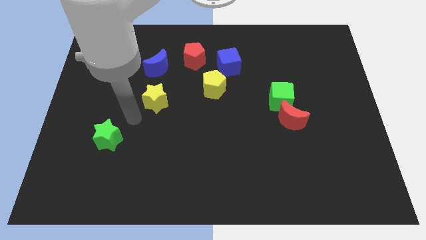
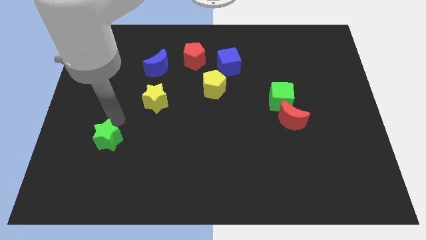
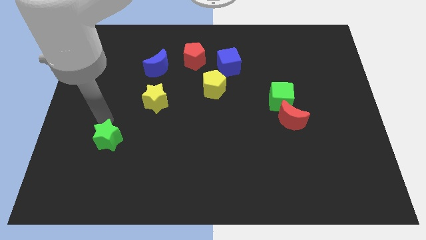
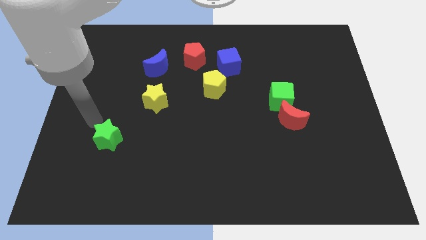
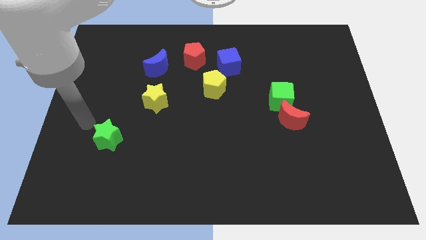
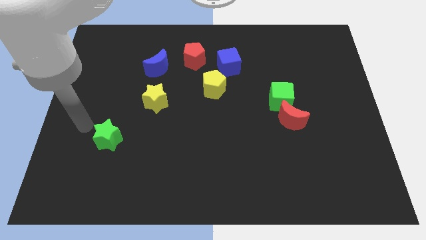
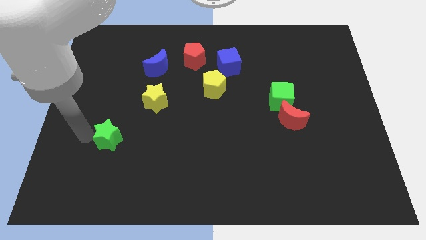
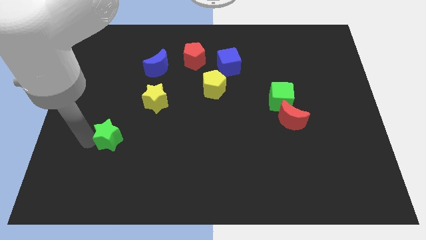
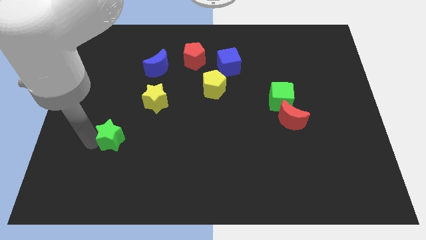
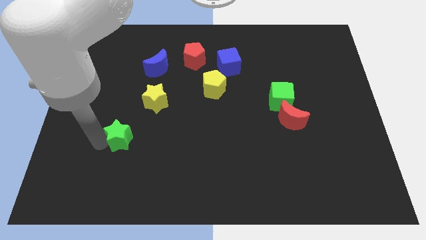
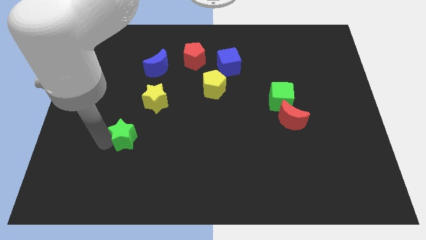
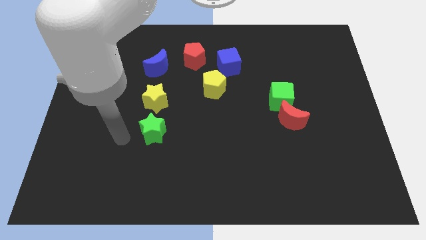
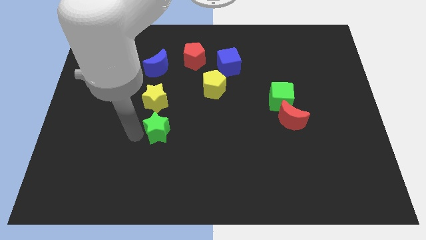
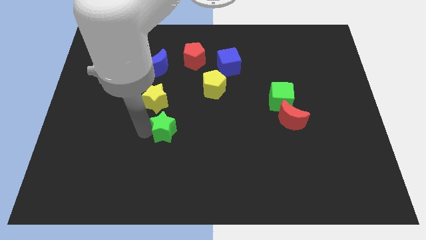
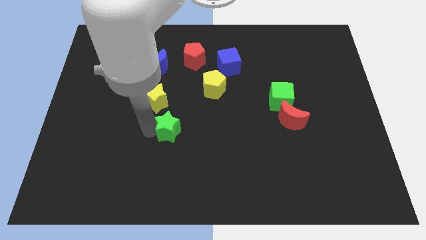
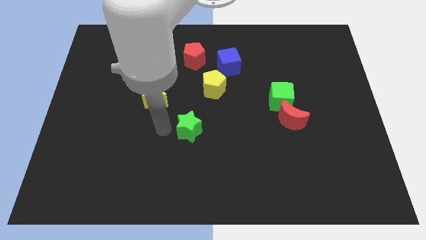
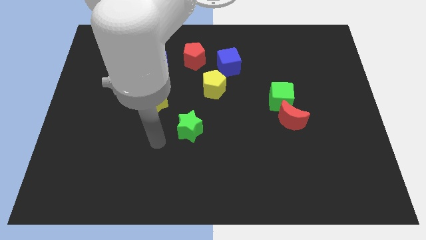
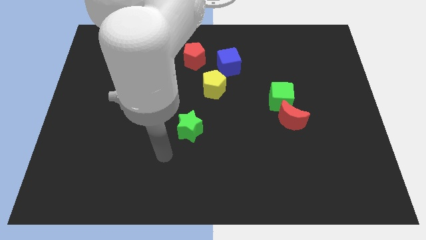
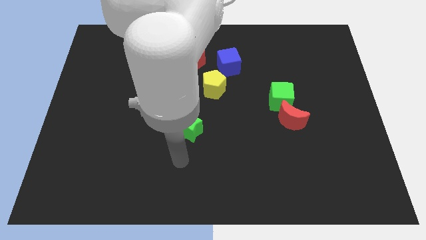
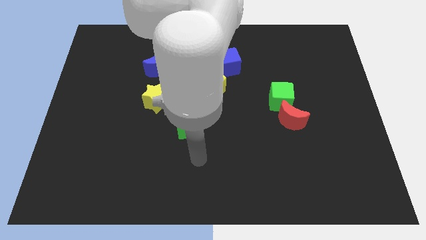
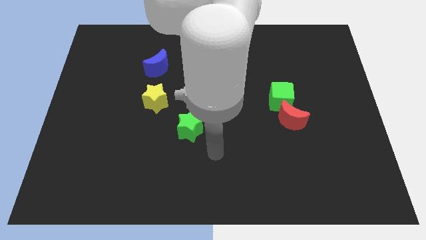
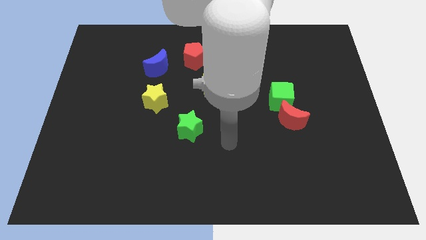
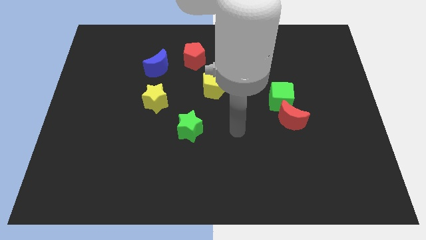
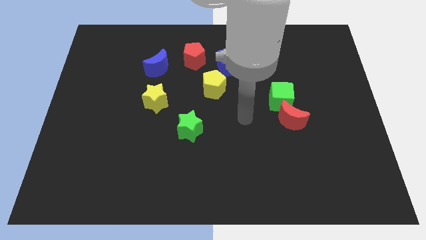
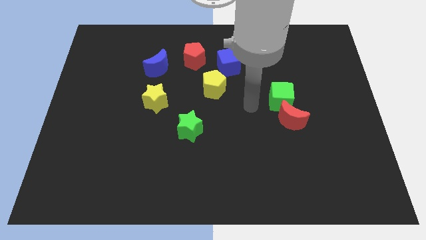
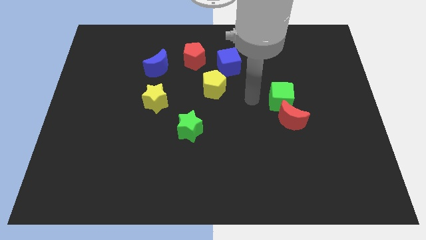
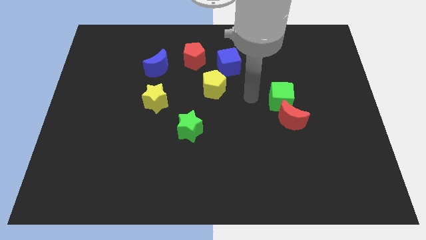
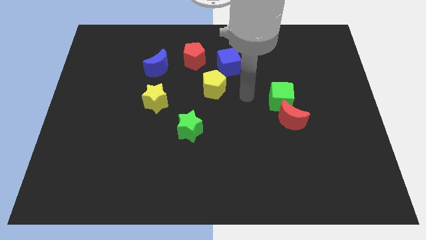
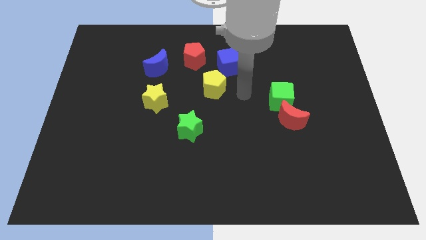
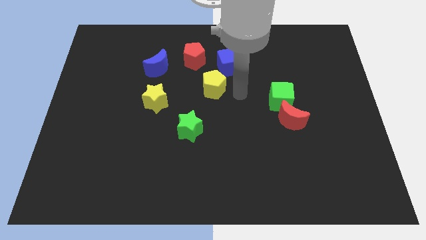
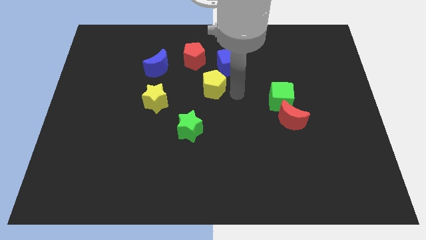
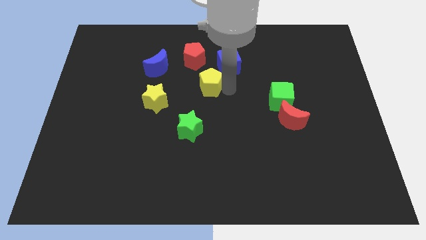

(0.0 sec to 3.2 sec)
put the green star vertically below the red pentagon

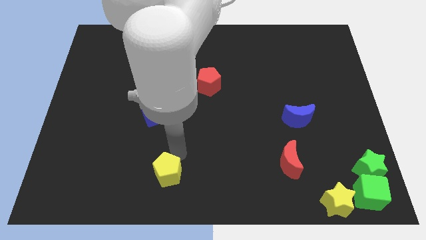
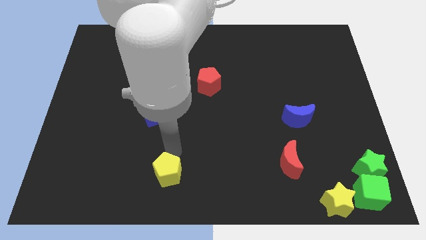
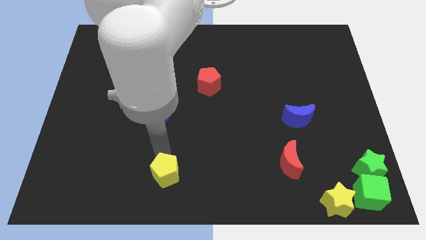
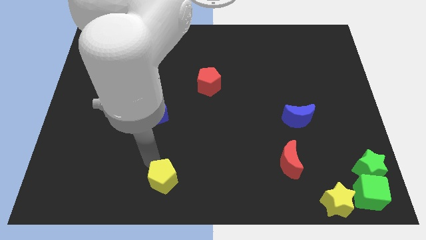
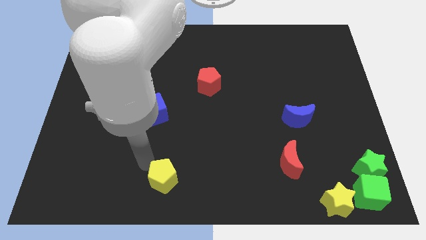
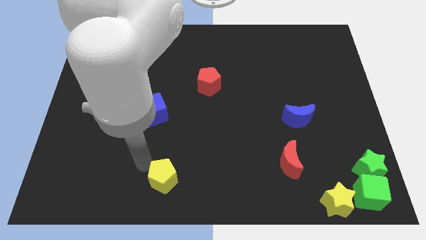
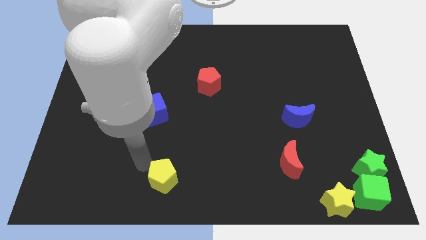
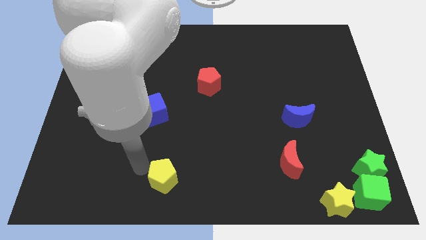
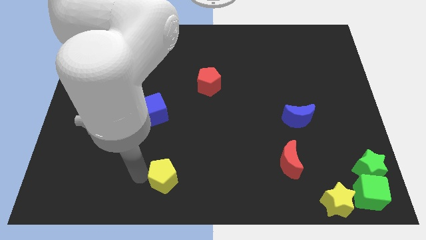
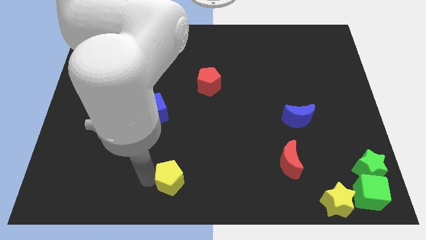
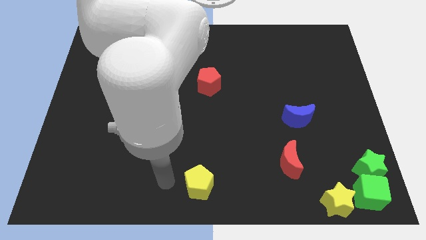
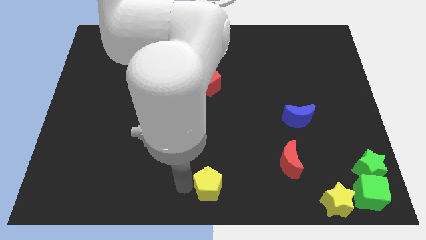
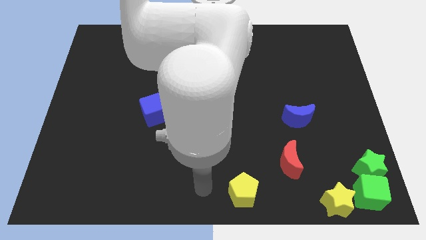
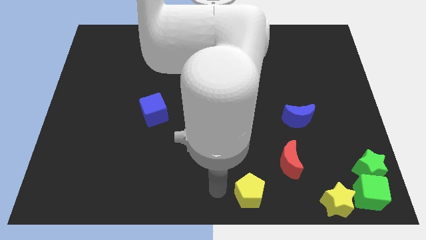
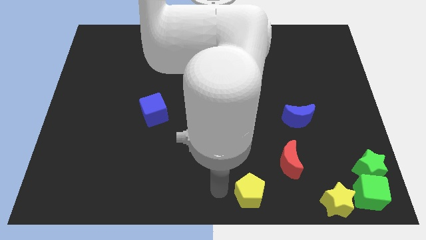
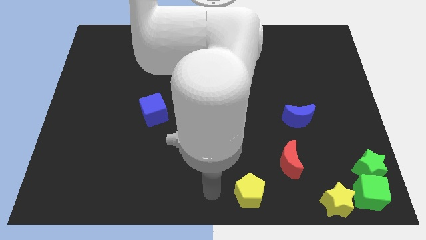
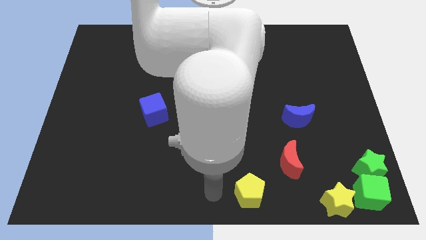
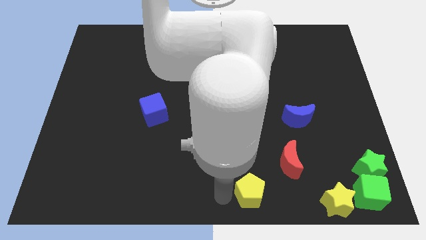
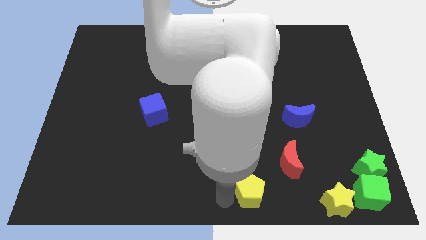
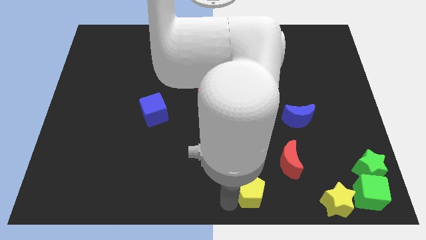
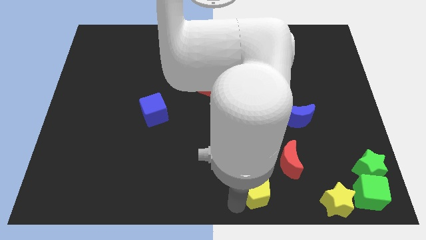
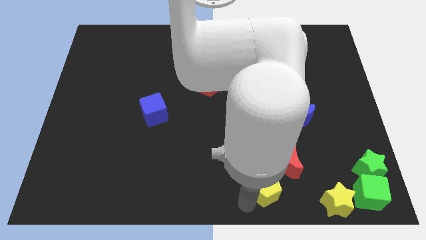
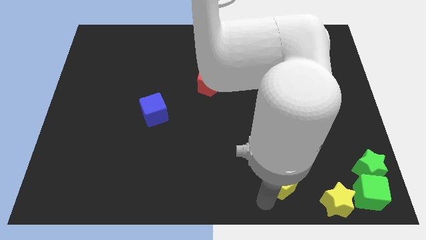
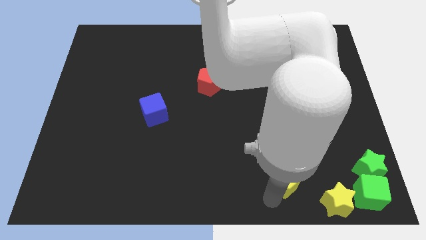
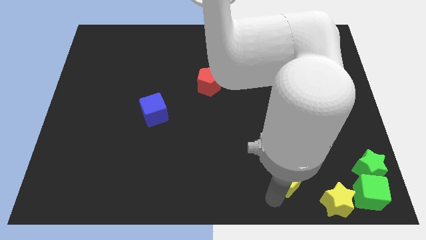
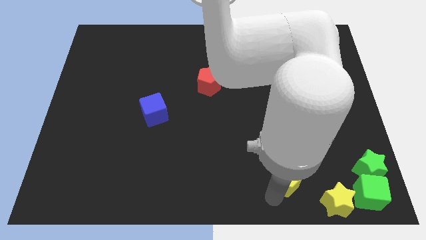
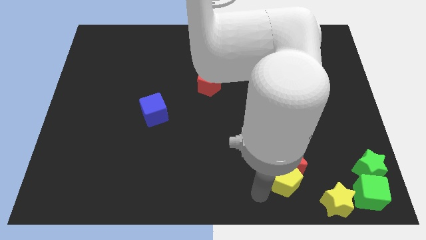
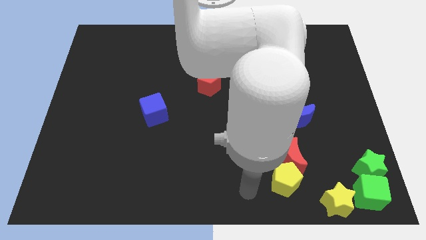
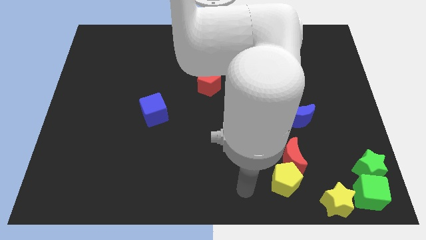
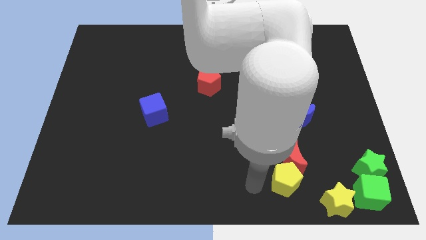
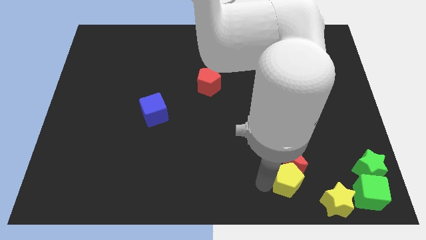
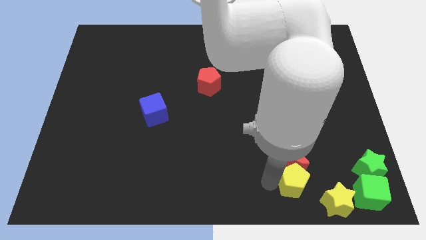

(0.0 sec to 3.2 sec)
push the yellow pentagon into the red crescent

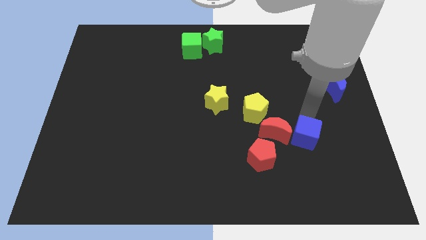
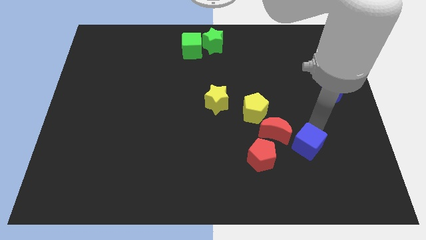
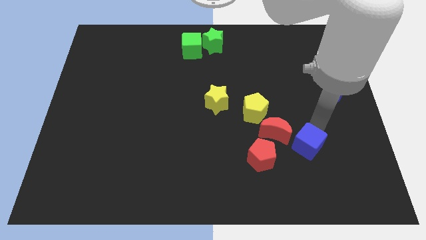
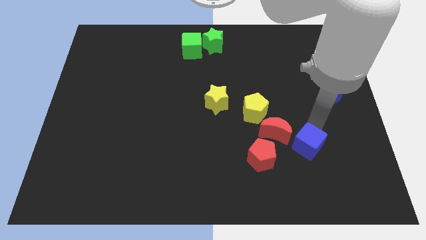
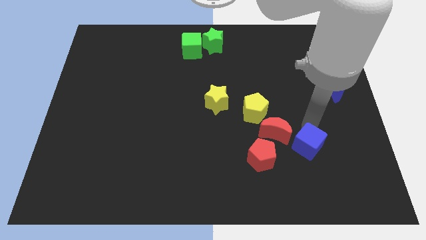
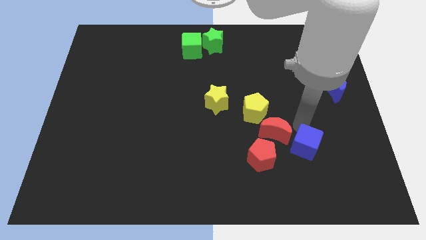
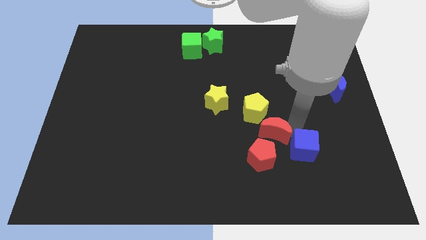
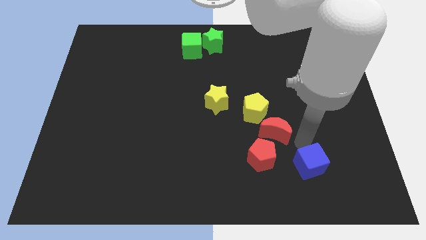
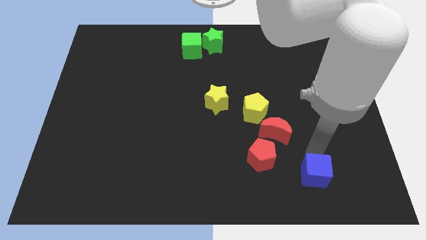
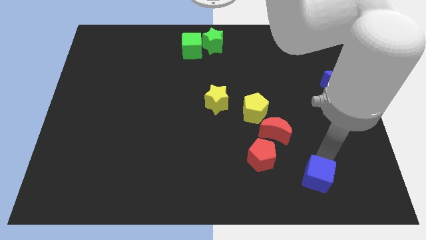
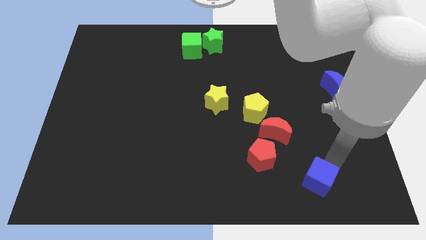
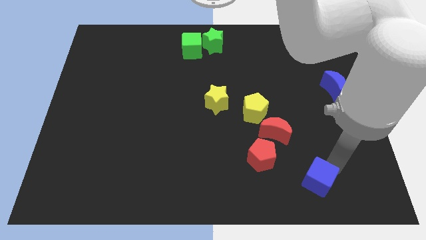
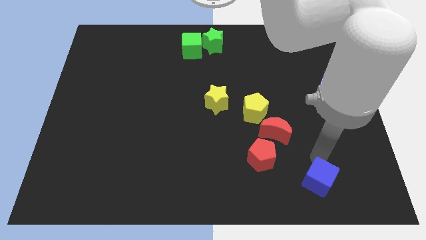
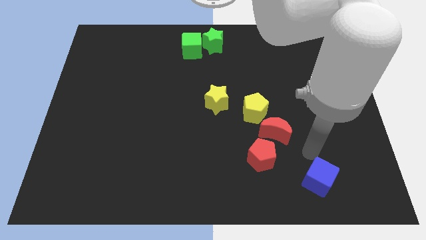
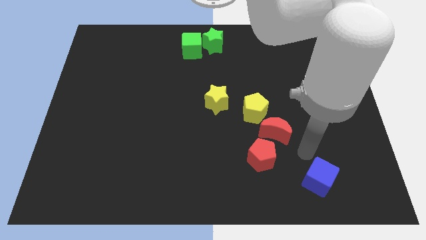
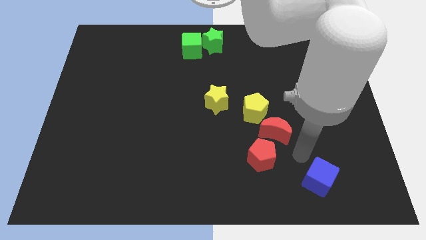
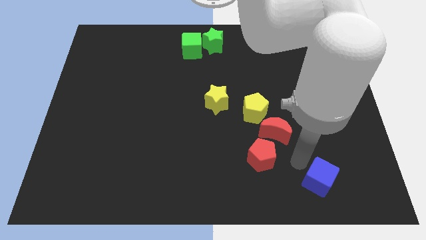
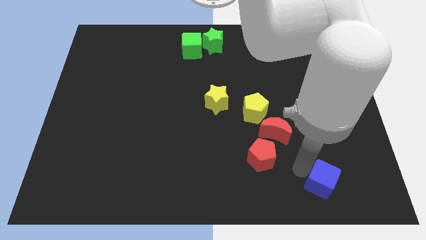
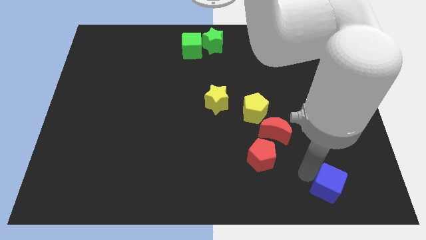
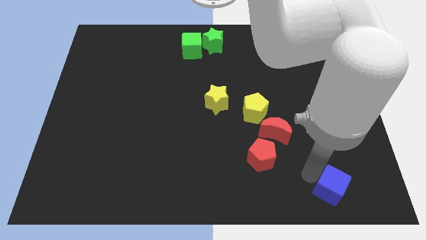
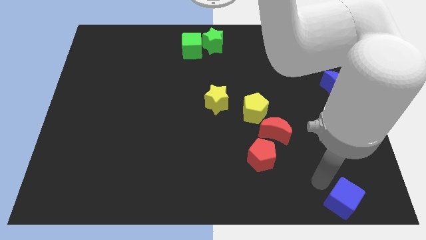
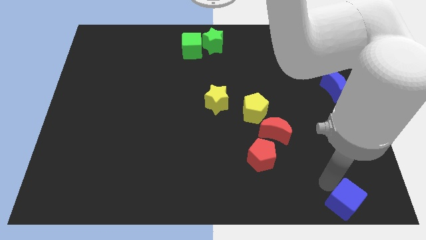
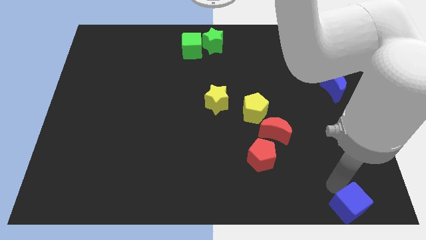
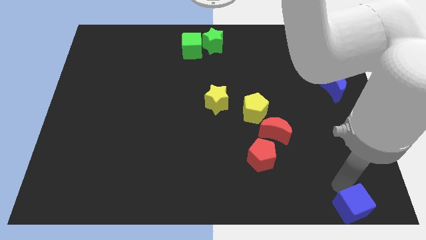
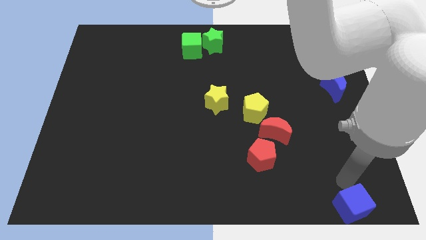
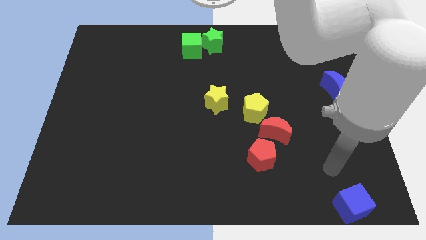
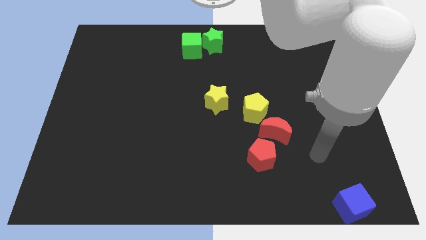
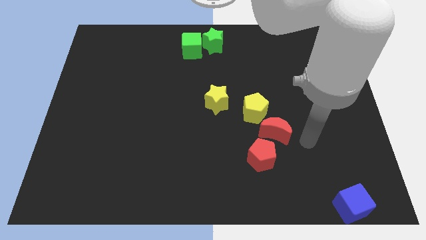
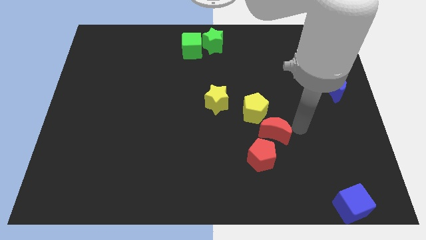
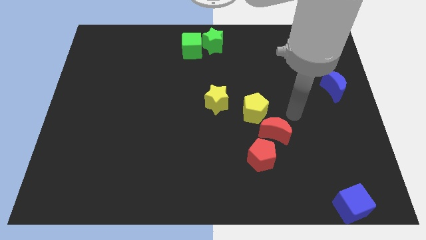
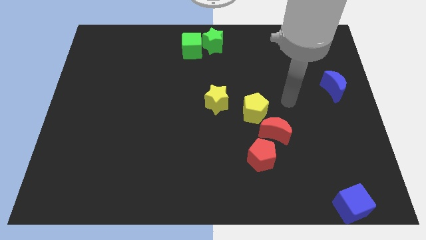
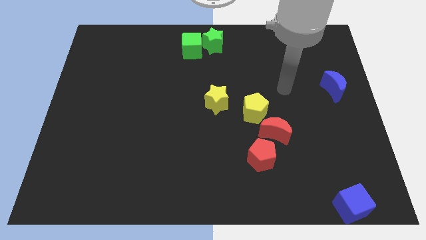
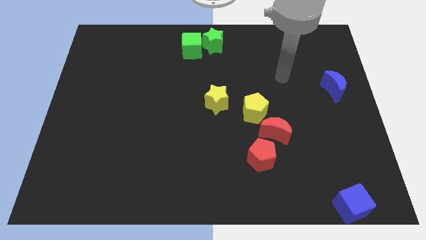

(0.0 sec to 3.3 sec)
slide the blue cube diagonally bottom right to the red moon
